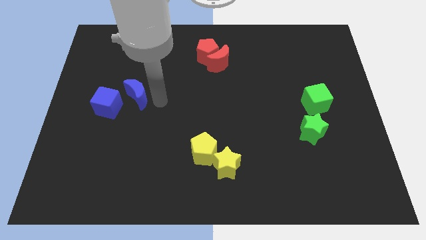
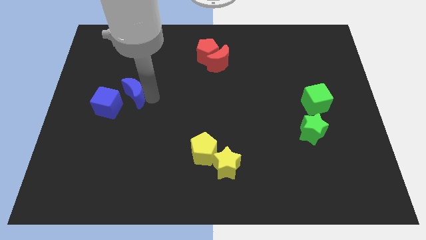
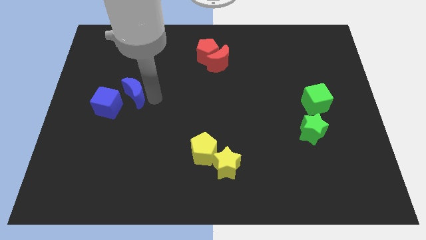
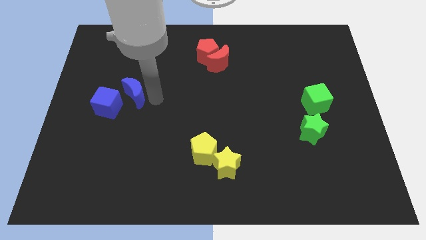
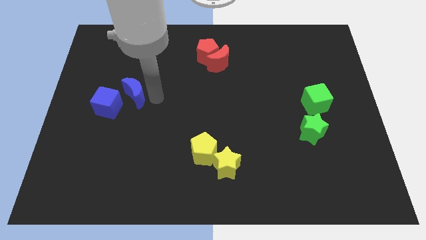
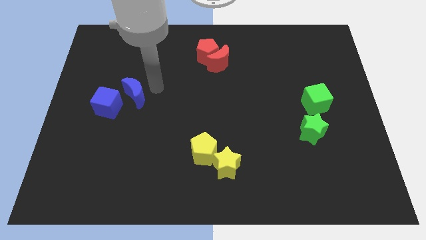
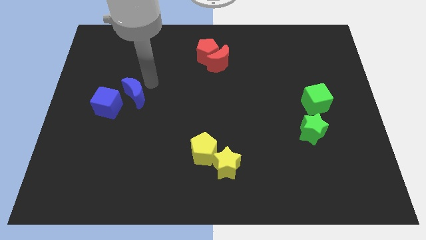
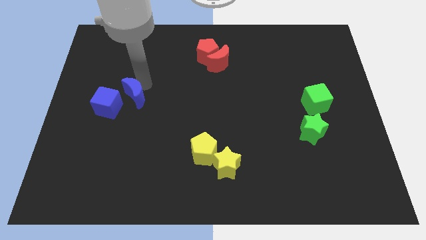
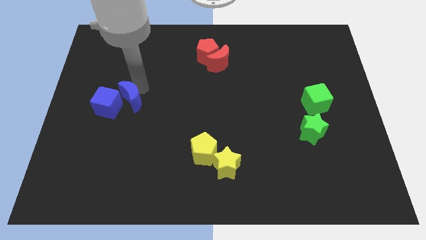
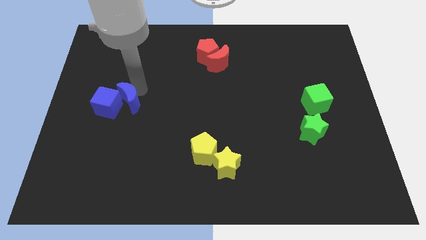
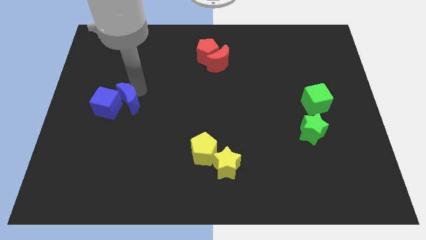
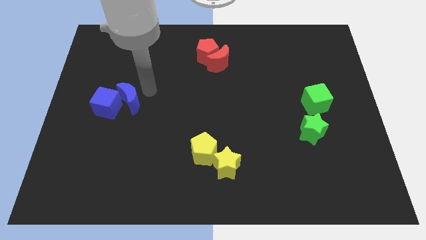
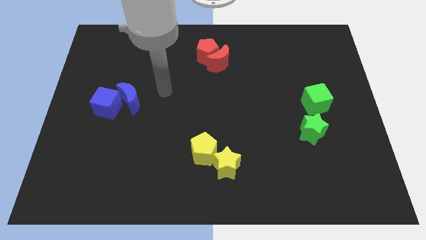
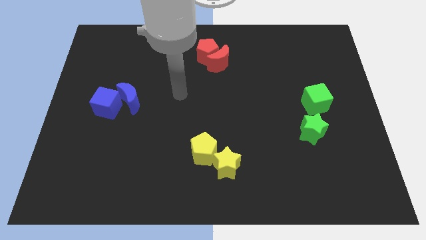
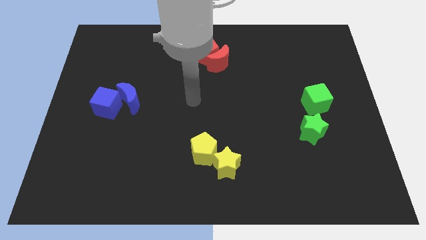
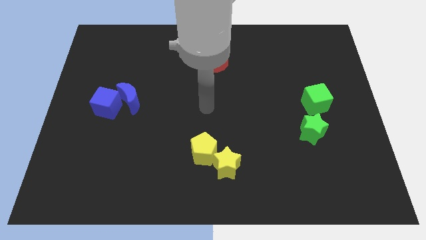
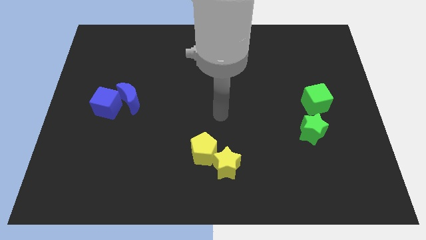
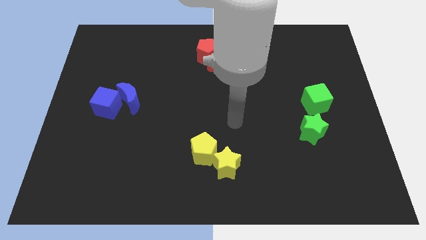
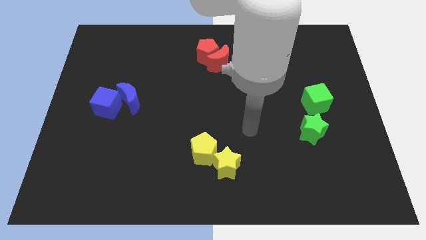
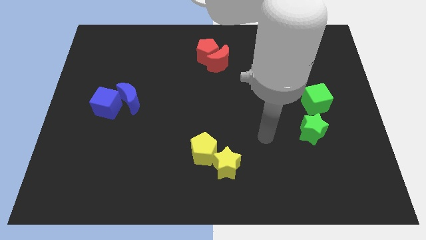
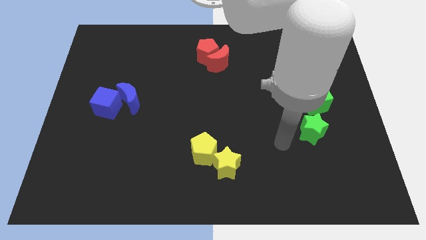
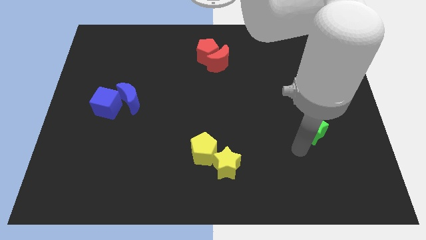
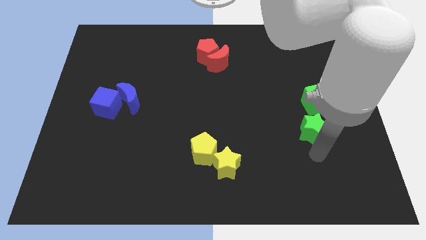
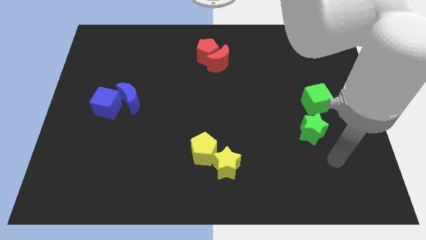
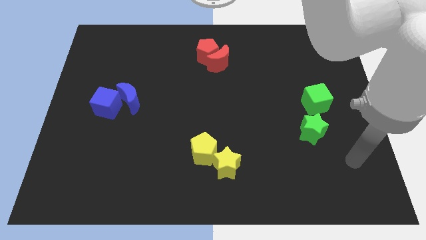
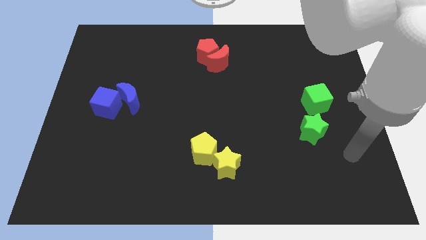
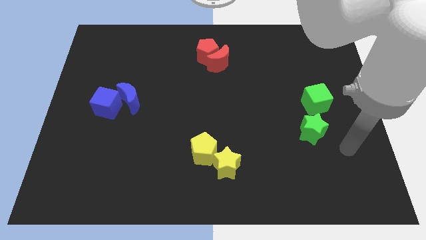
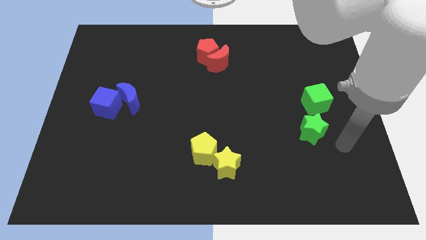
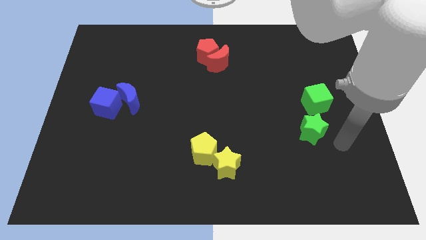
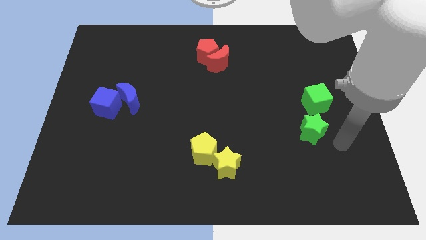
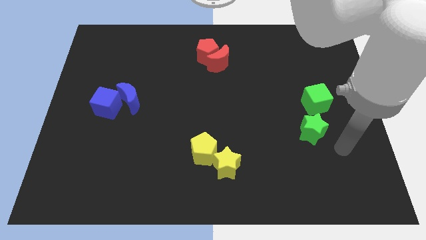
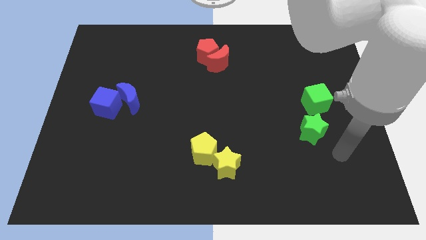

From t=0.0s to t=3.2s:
push the blue moon into the blue cube

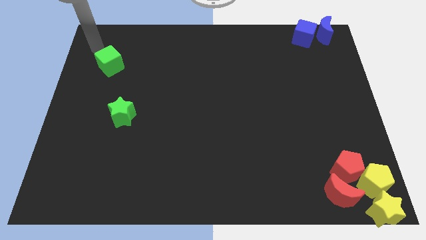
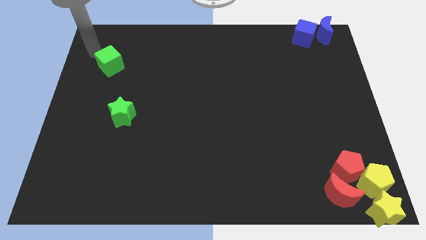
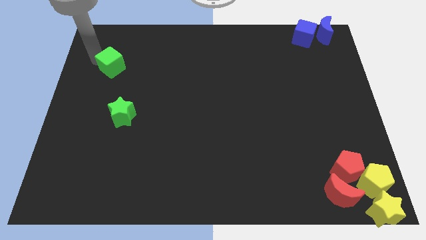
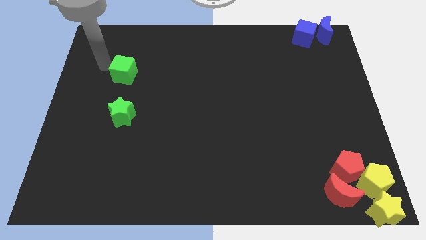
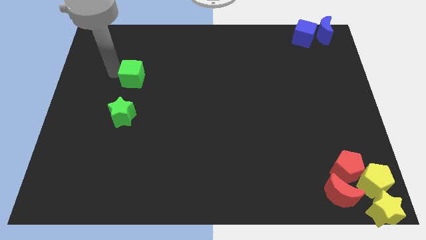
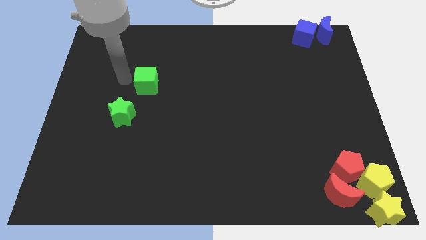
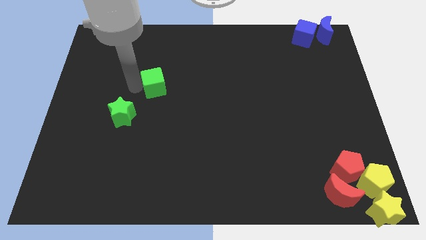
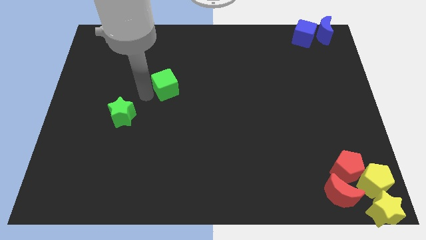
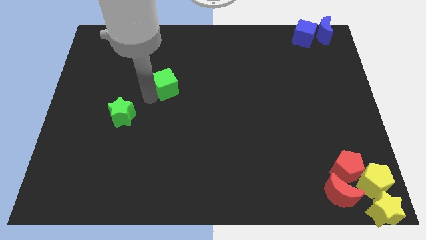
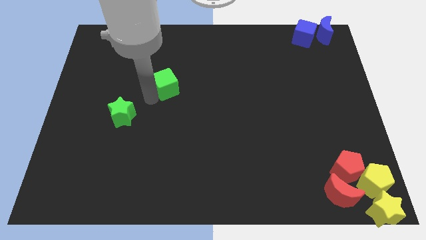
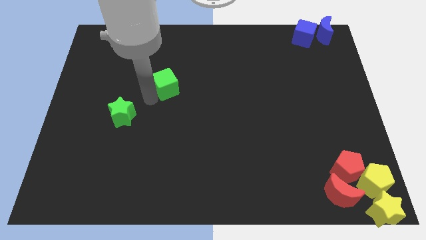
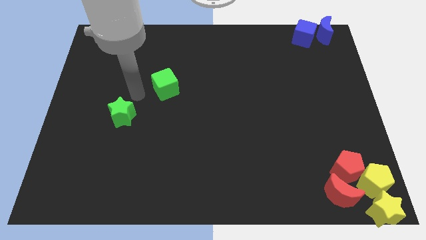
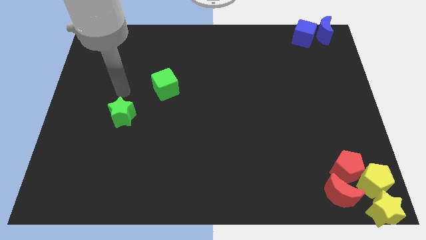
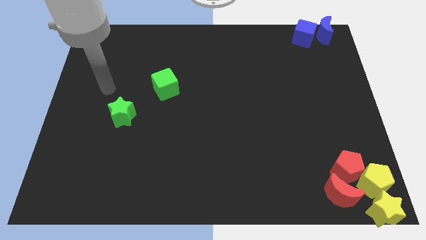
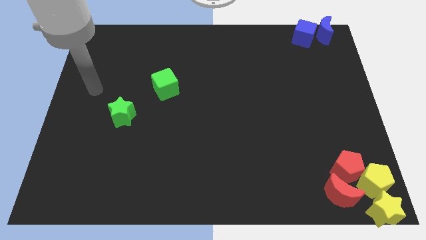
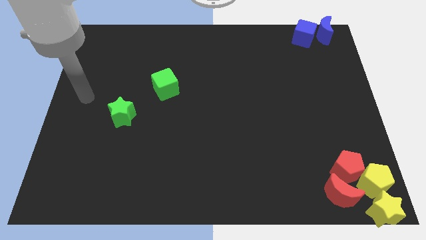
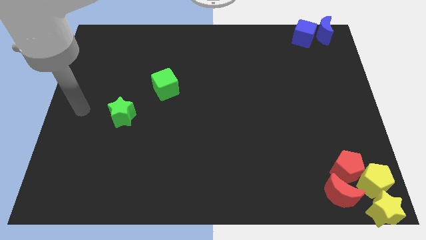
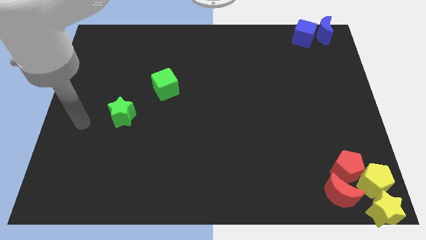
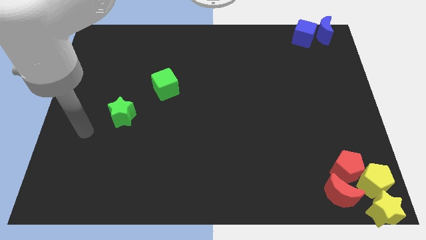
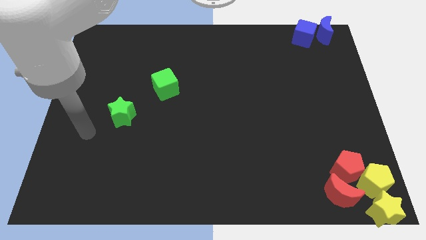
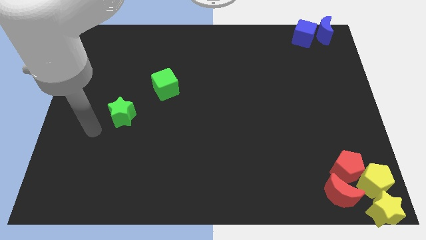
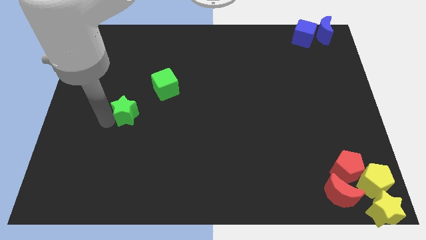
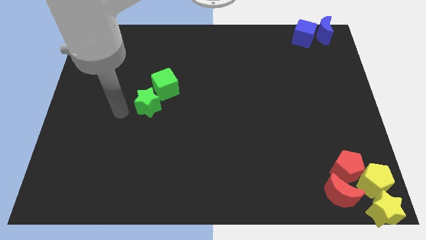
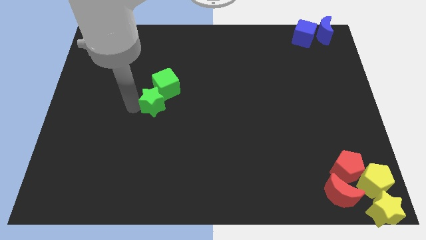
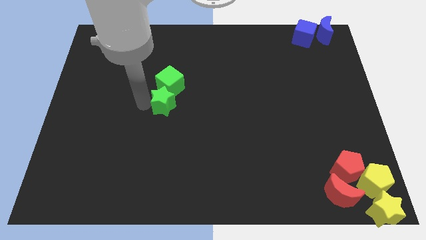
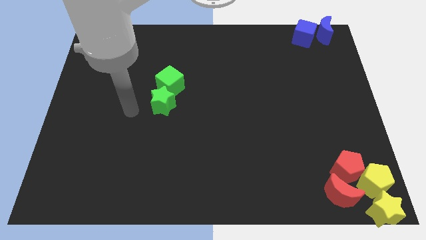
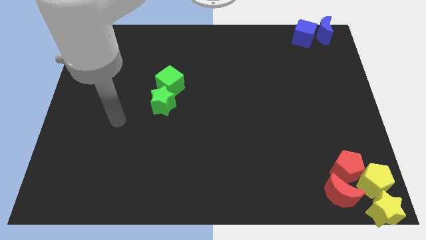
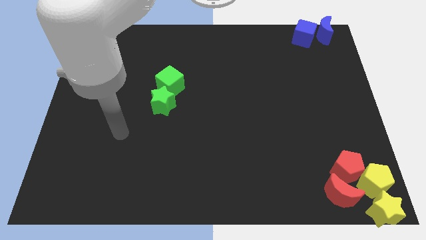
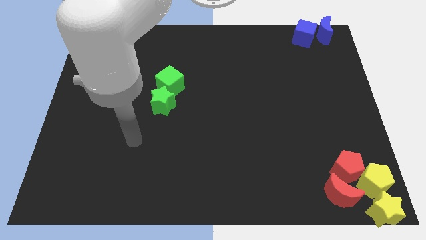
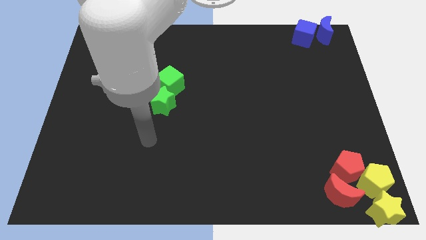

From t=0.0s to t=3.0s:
push the green star into the green cube

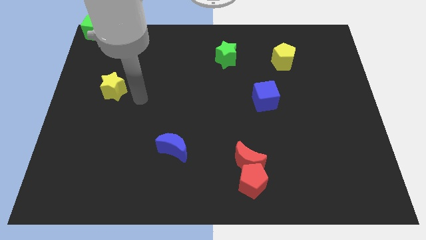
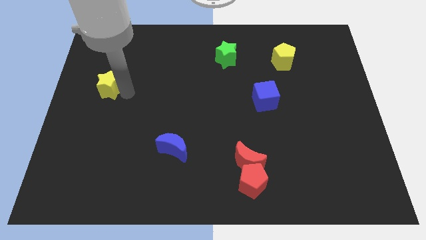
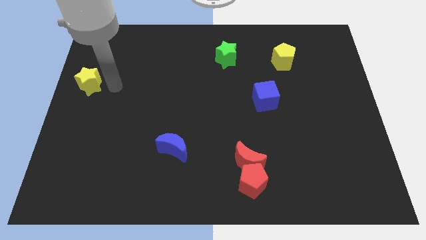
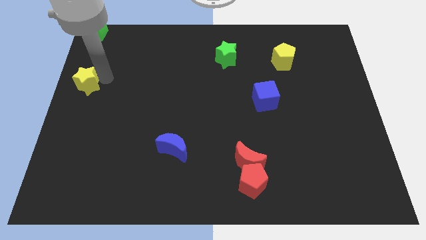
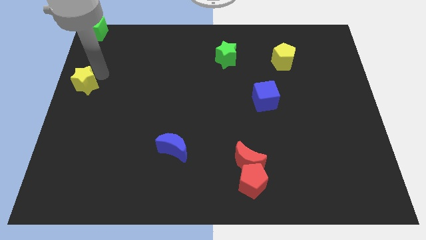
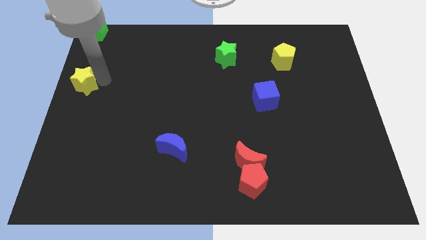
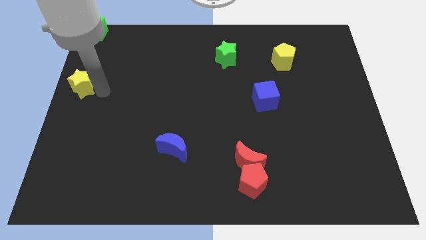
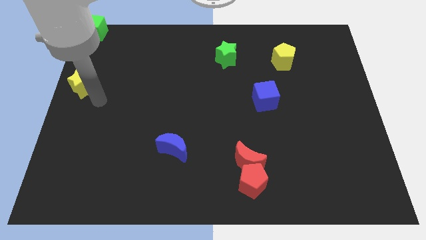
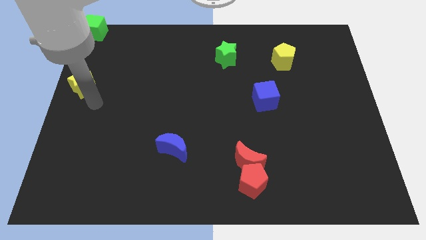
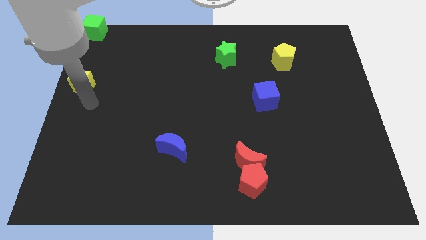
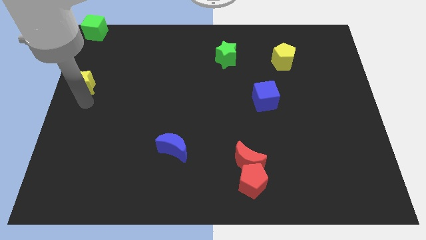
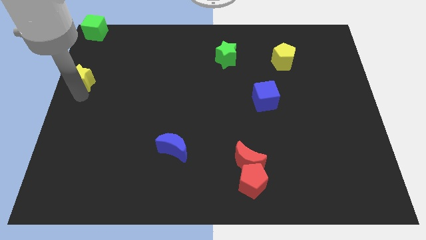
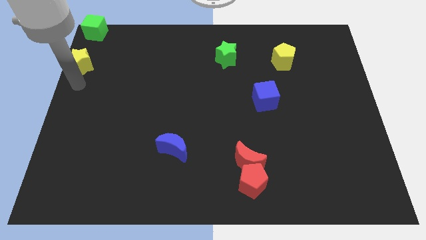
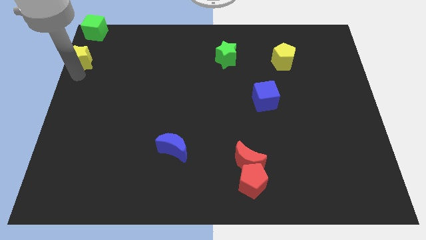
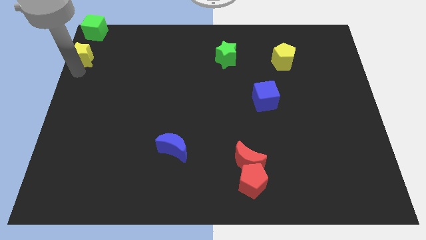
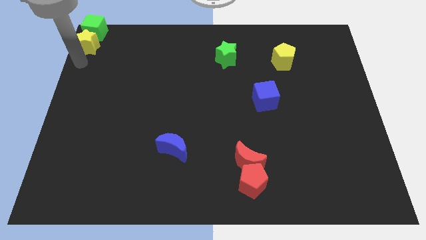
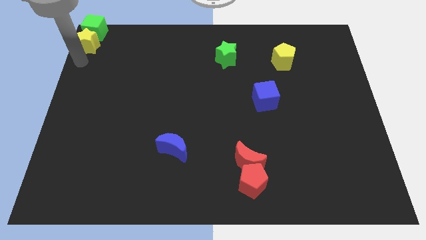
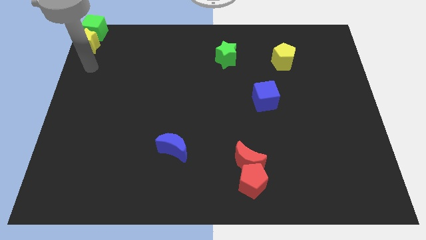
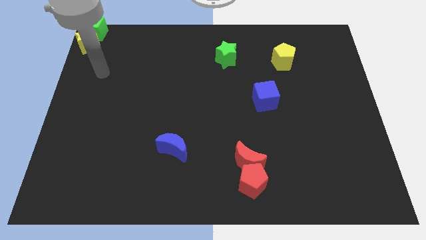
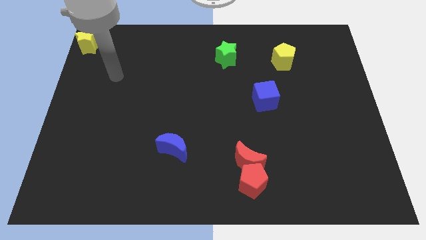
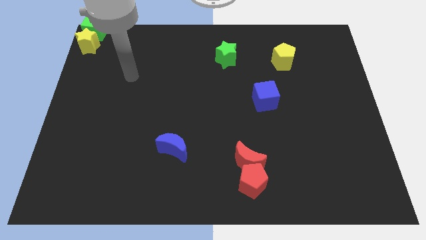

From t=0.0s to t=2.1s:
push the yellow star below into green cube

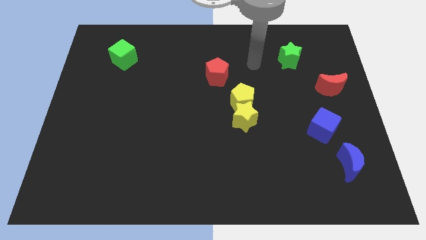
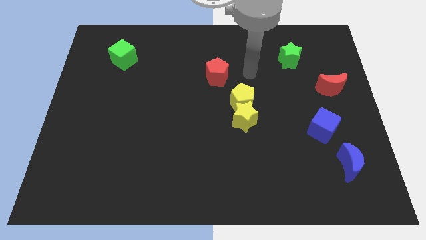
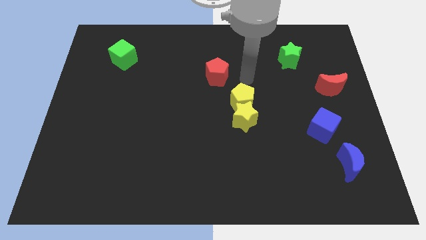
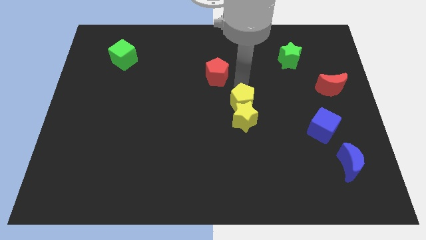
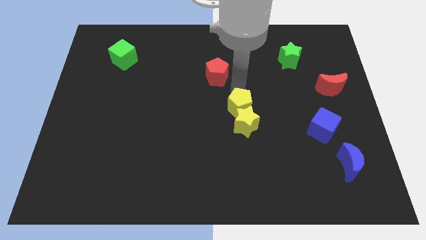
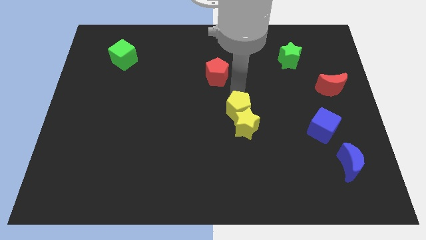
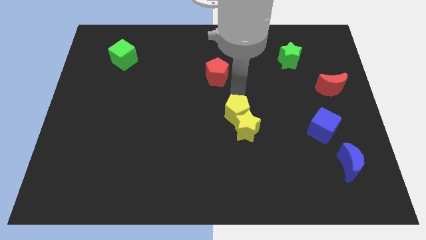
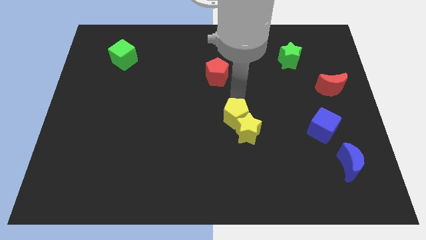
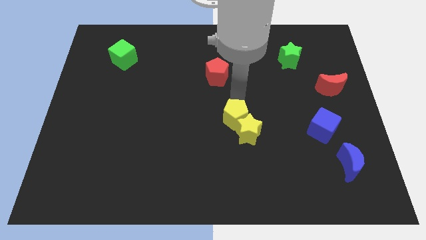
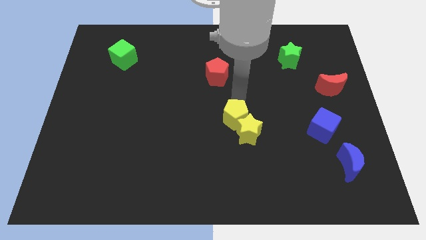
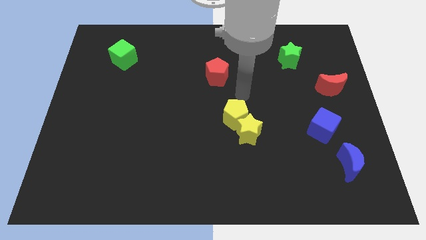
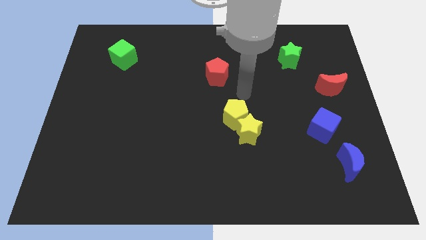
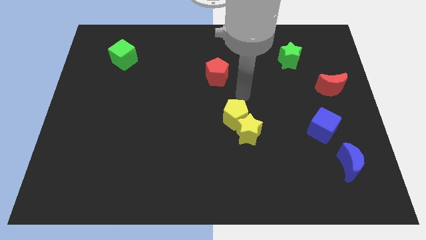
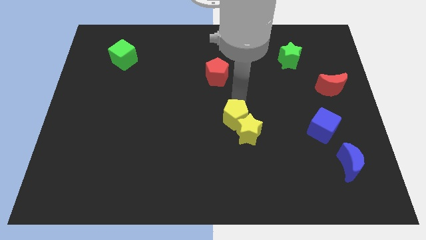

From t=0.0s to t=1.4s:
push the yellow star with the yellow pentagon
